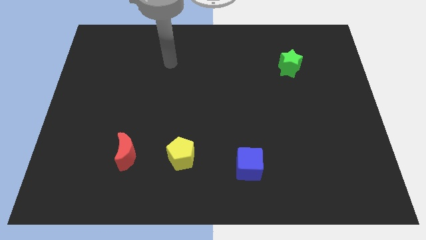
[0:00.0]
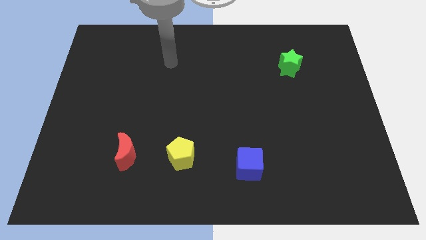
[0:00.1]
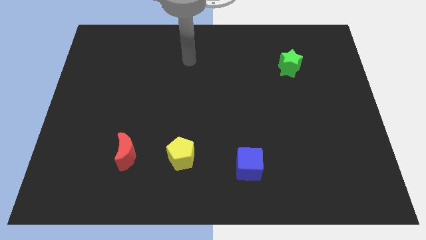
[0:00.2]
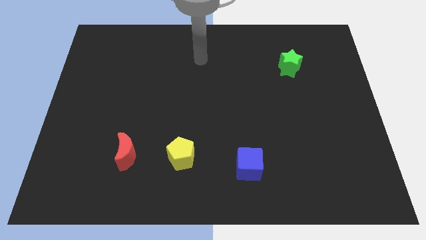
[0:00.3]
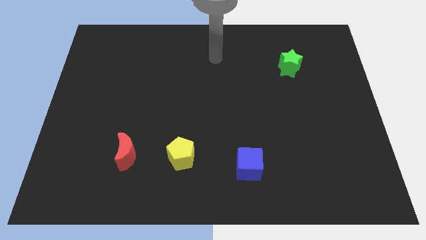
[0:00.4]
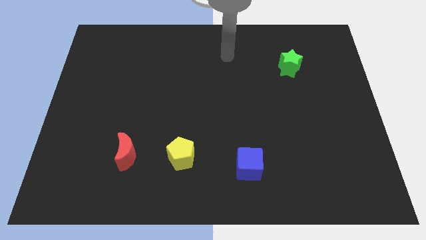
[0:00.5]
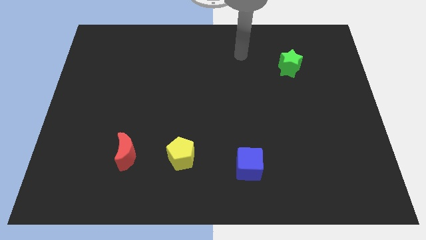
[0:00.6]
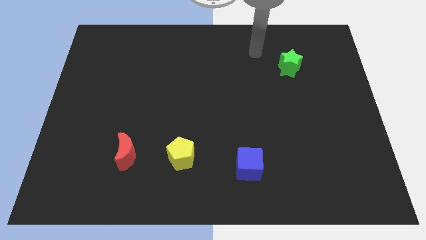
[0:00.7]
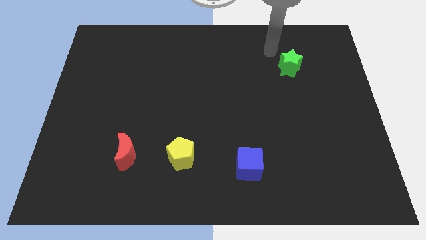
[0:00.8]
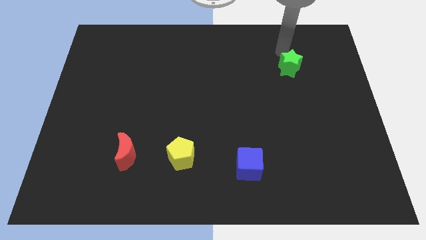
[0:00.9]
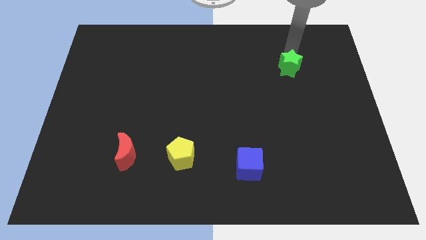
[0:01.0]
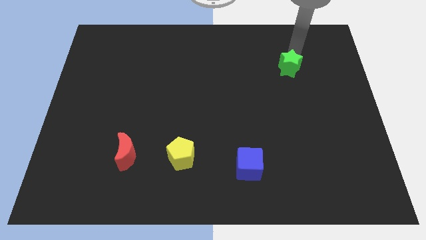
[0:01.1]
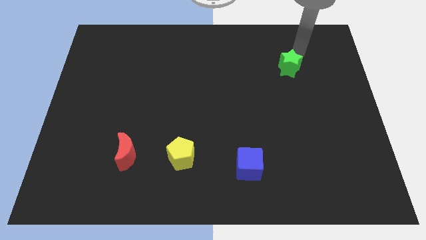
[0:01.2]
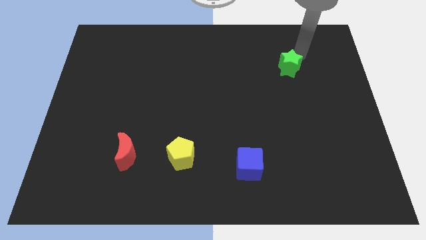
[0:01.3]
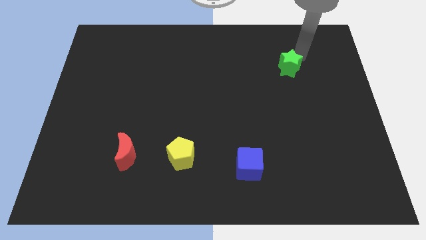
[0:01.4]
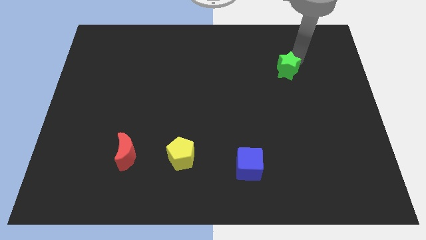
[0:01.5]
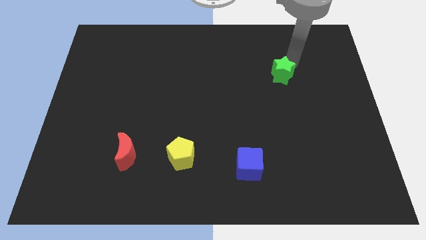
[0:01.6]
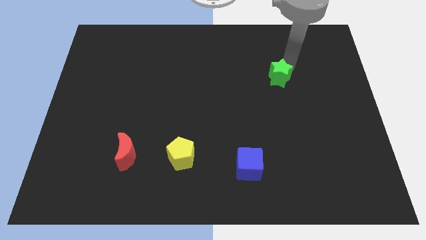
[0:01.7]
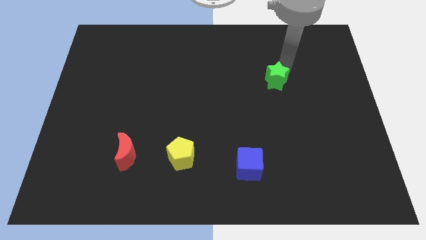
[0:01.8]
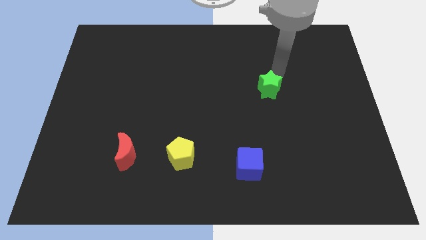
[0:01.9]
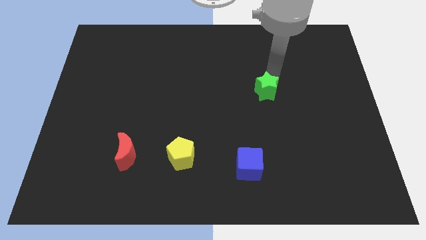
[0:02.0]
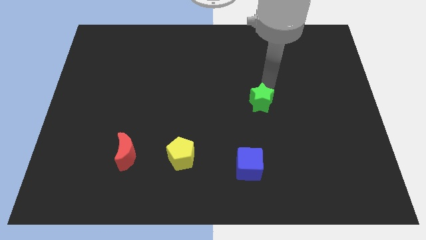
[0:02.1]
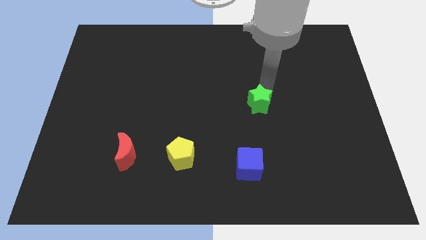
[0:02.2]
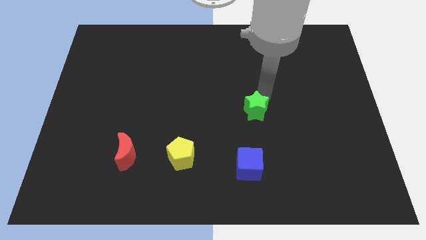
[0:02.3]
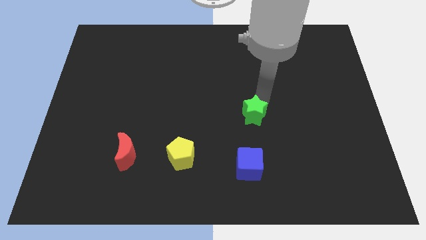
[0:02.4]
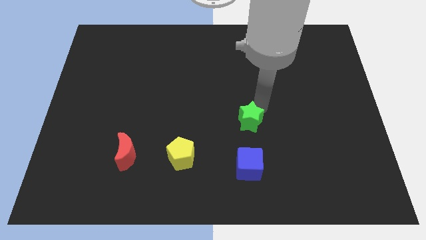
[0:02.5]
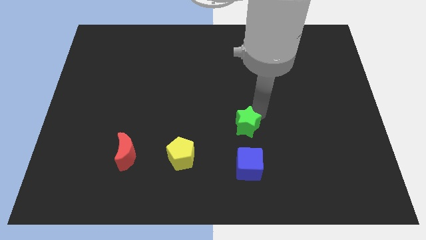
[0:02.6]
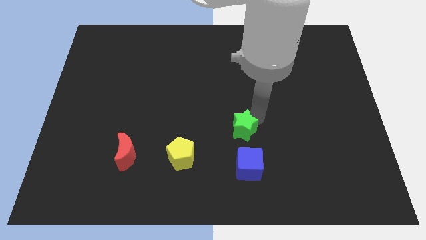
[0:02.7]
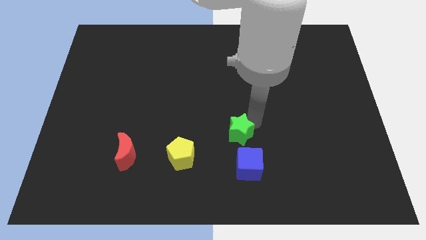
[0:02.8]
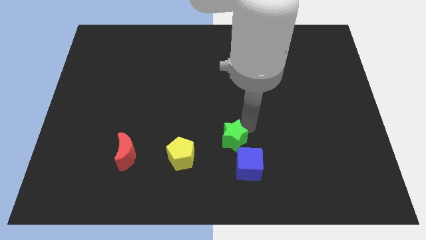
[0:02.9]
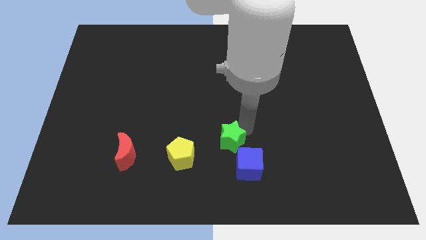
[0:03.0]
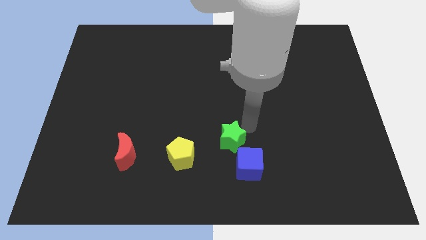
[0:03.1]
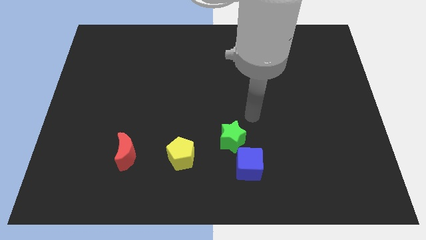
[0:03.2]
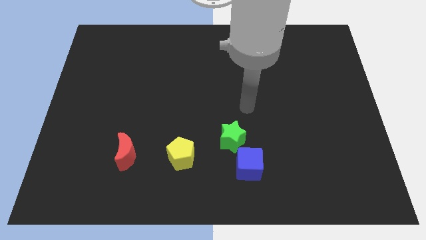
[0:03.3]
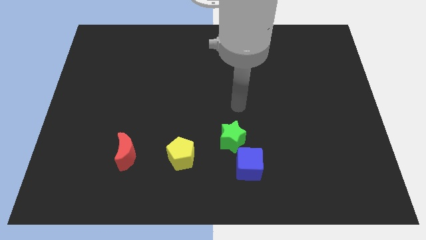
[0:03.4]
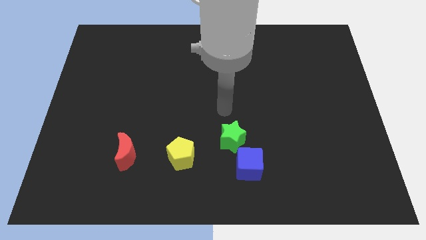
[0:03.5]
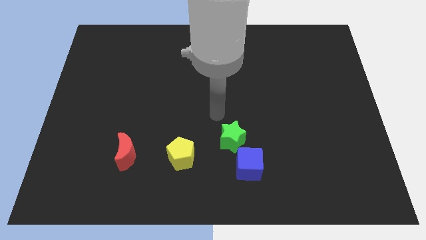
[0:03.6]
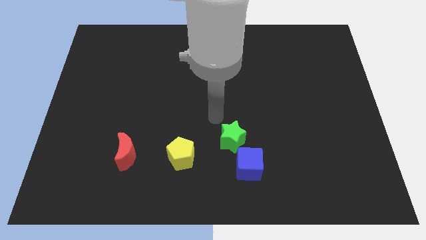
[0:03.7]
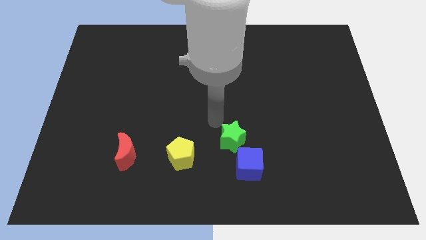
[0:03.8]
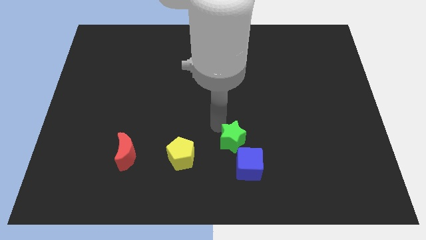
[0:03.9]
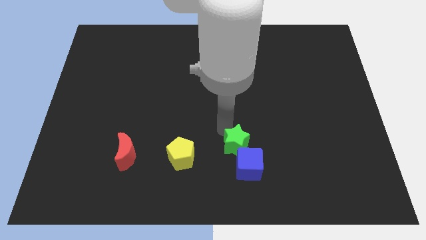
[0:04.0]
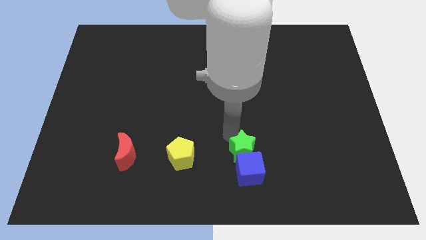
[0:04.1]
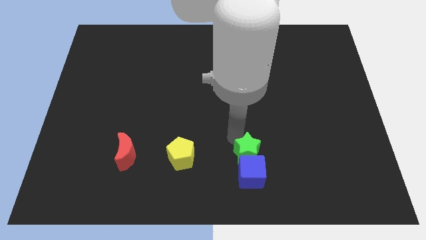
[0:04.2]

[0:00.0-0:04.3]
slide the star to the blue cube

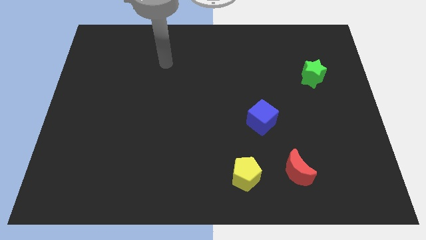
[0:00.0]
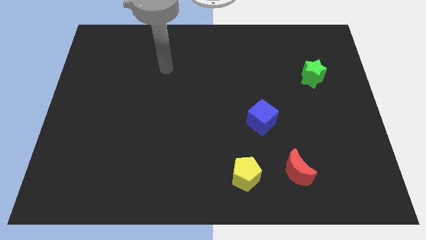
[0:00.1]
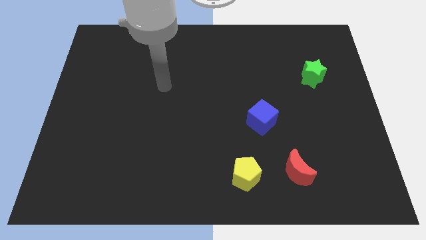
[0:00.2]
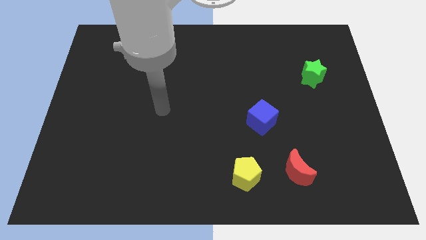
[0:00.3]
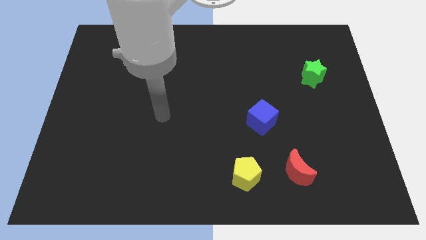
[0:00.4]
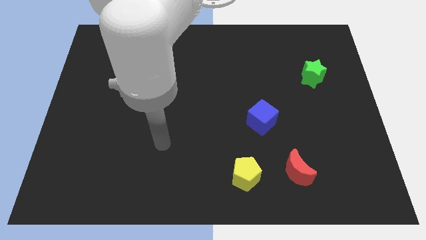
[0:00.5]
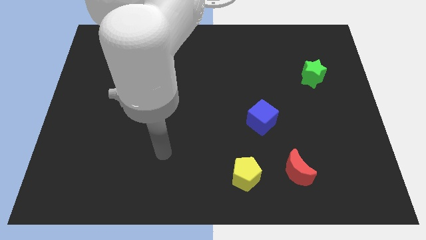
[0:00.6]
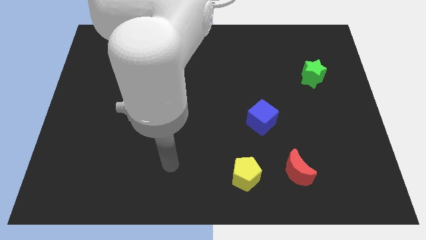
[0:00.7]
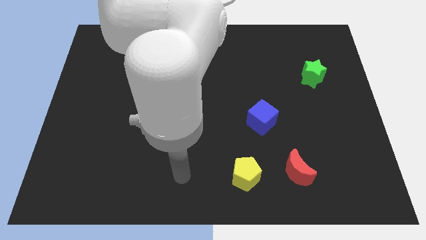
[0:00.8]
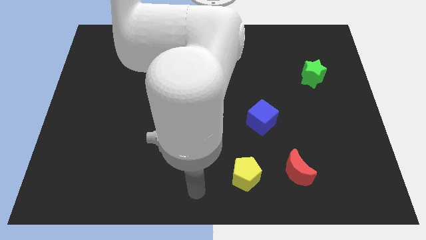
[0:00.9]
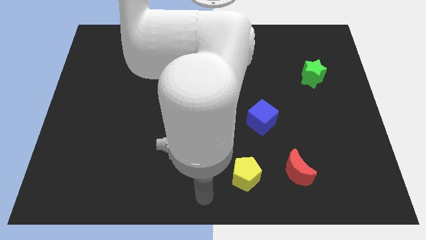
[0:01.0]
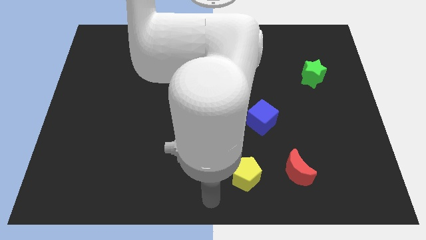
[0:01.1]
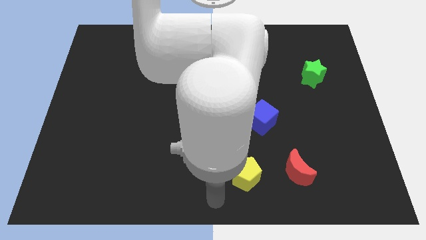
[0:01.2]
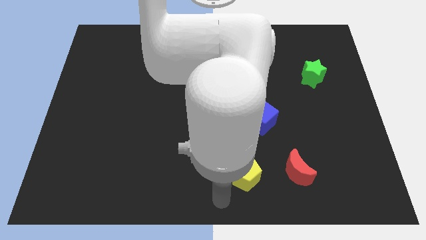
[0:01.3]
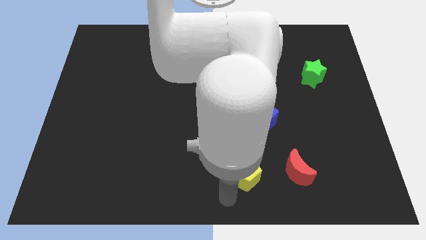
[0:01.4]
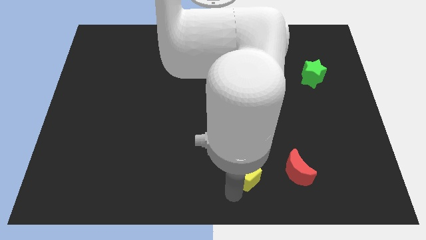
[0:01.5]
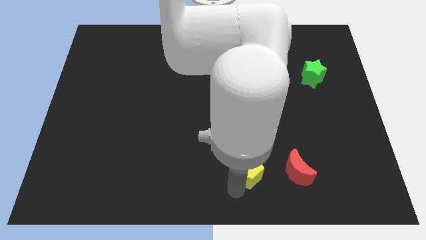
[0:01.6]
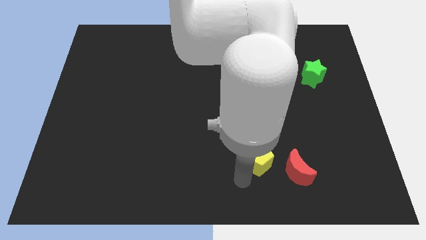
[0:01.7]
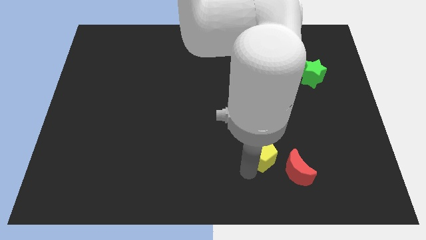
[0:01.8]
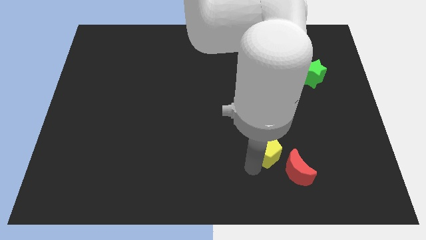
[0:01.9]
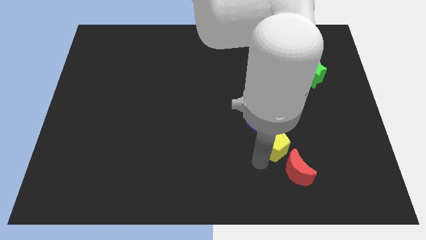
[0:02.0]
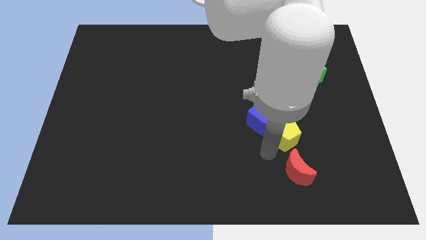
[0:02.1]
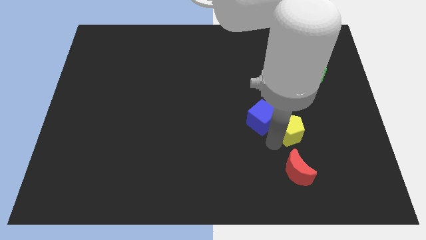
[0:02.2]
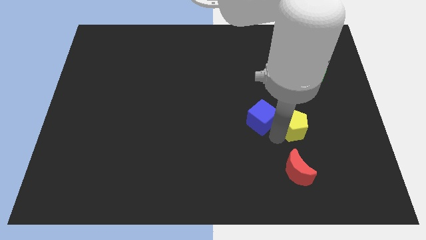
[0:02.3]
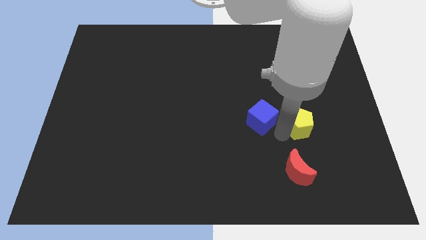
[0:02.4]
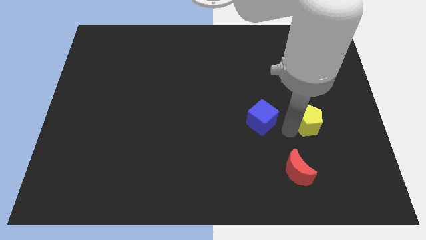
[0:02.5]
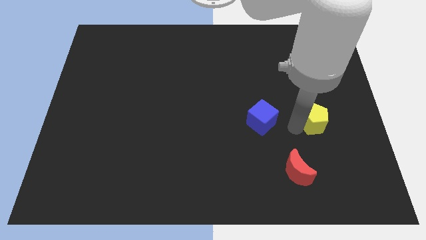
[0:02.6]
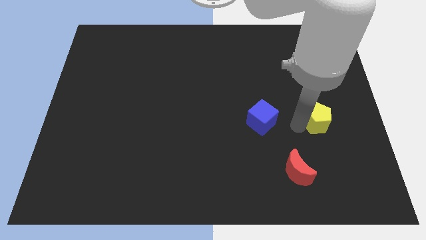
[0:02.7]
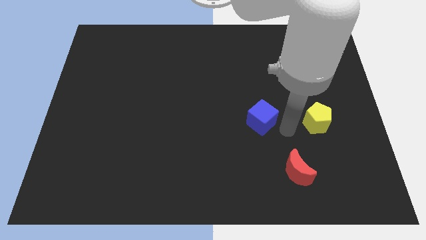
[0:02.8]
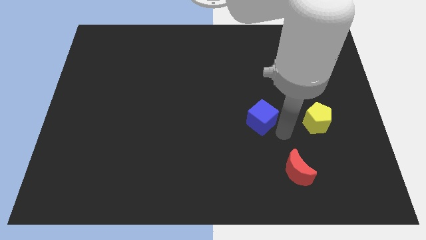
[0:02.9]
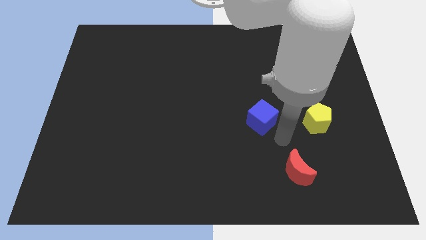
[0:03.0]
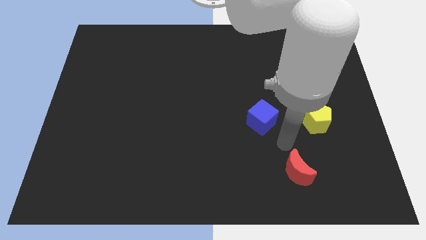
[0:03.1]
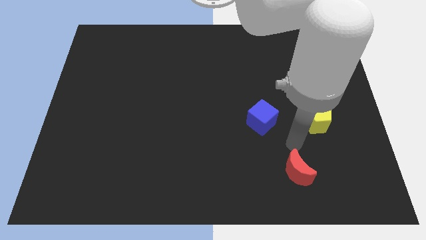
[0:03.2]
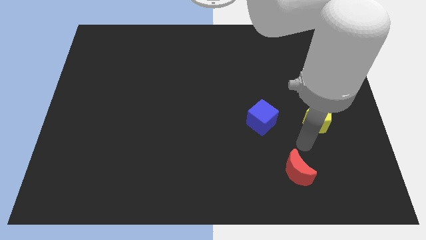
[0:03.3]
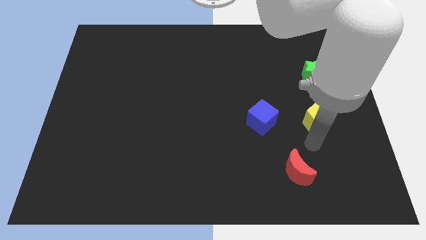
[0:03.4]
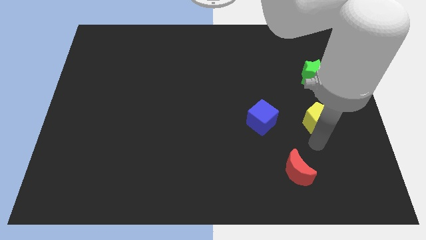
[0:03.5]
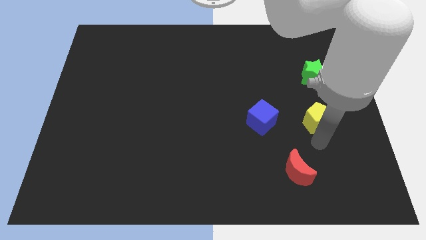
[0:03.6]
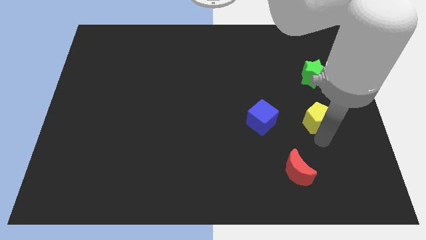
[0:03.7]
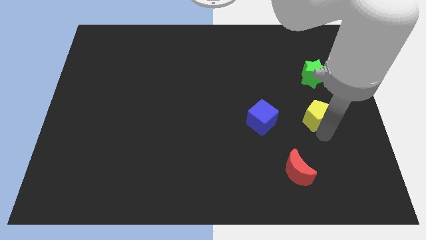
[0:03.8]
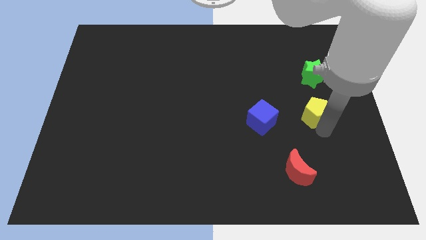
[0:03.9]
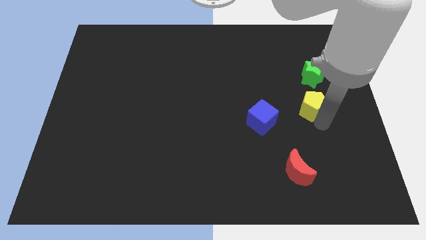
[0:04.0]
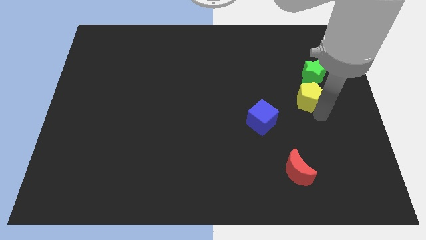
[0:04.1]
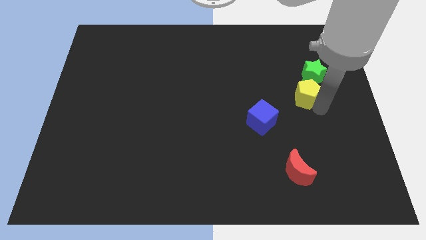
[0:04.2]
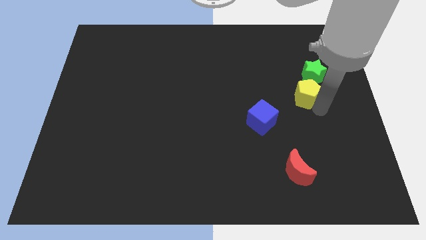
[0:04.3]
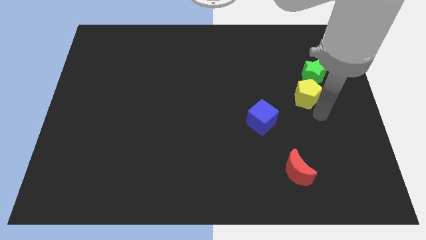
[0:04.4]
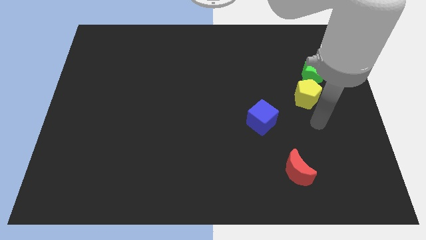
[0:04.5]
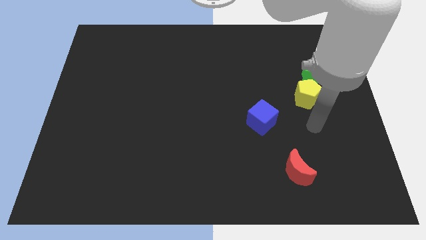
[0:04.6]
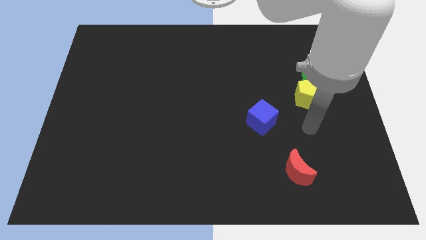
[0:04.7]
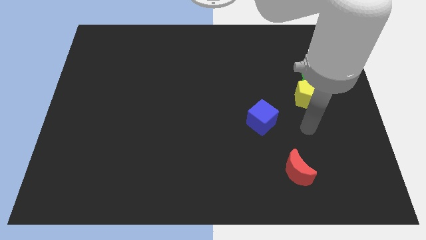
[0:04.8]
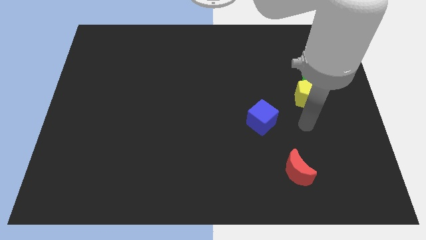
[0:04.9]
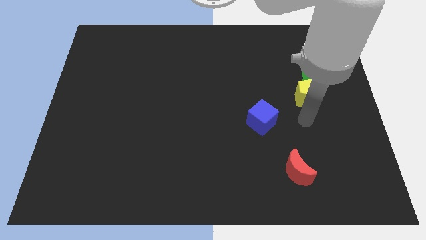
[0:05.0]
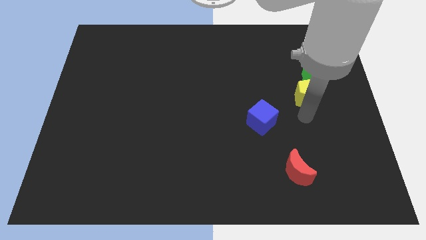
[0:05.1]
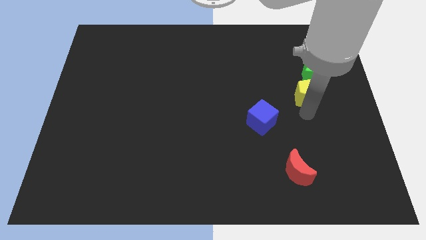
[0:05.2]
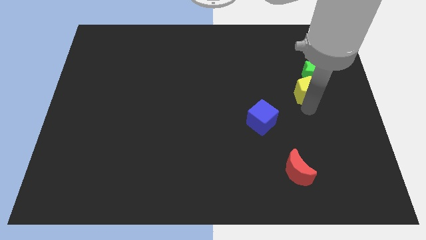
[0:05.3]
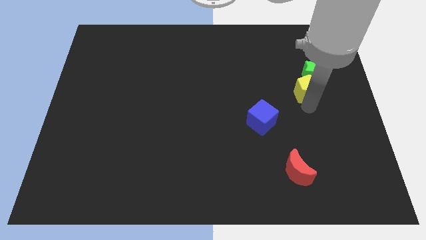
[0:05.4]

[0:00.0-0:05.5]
push the yellow block to the green star
